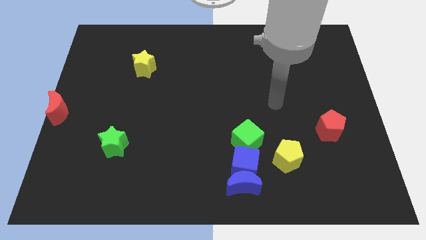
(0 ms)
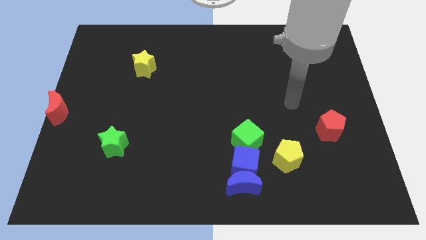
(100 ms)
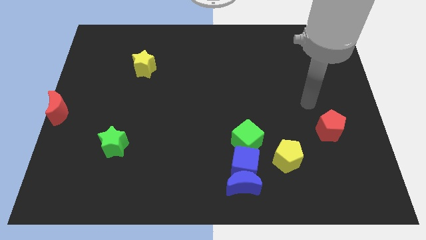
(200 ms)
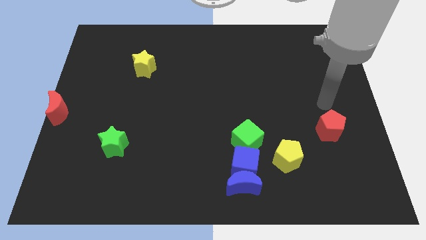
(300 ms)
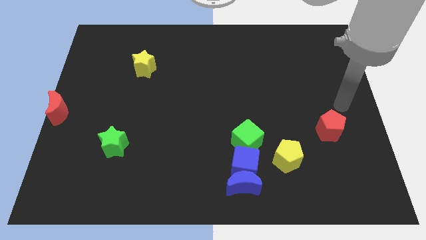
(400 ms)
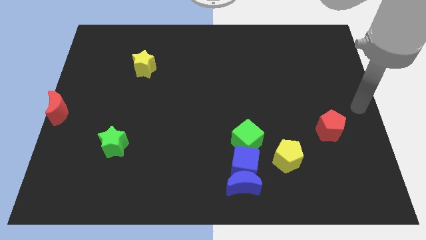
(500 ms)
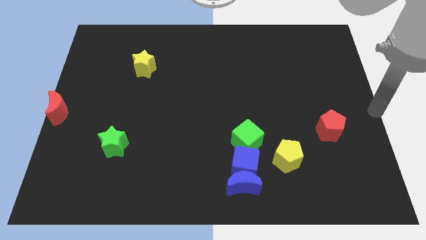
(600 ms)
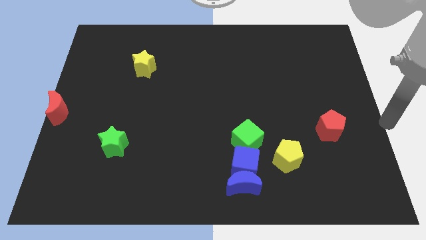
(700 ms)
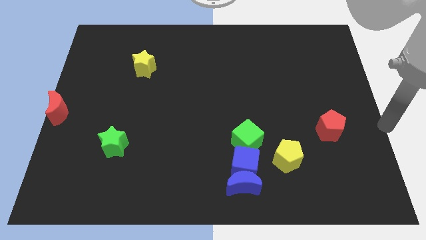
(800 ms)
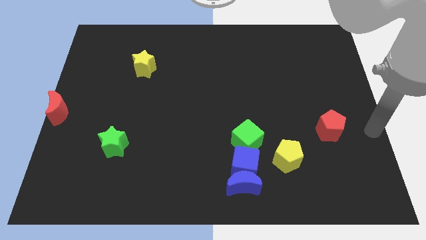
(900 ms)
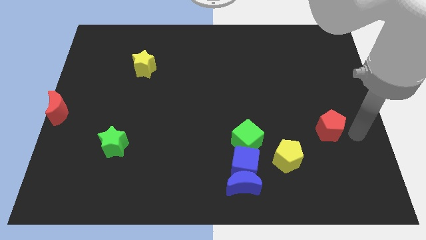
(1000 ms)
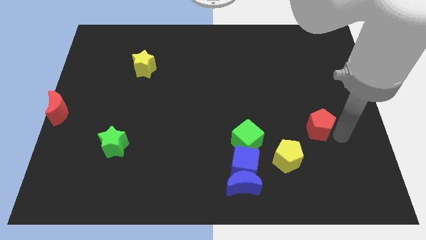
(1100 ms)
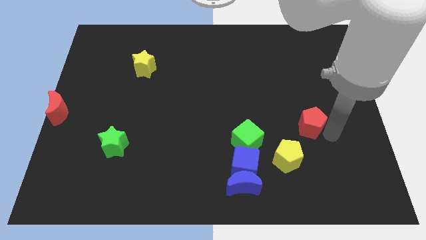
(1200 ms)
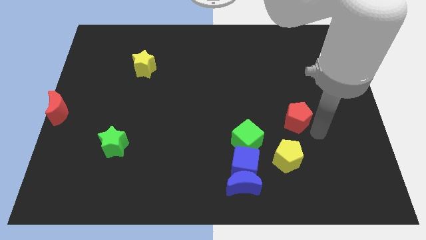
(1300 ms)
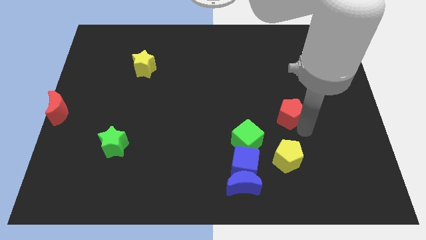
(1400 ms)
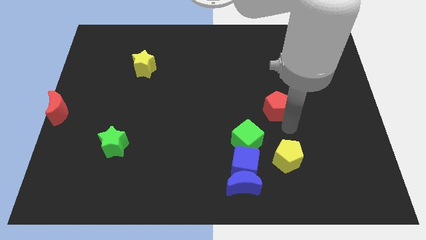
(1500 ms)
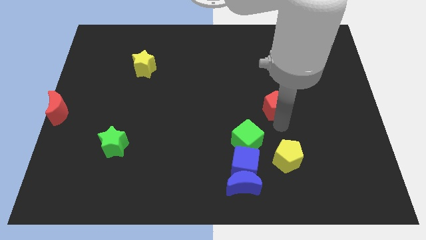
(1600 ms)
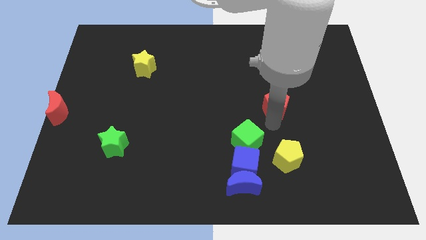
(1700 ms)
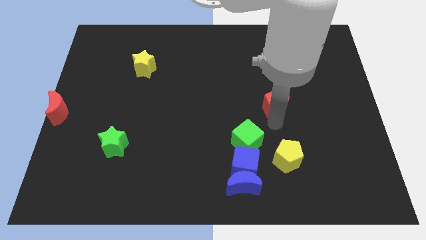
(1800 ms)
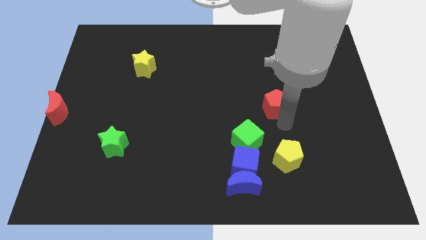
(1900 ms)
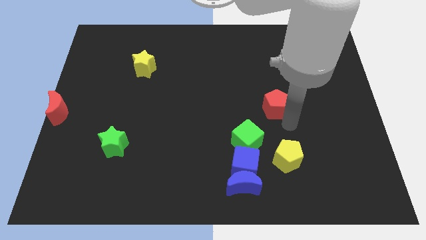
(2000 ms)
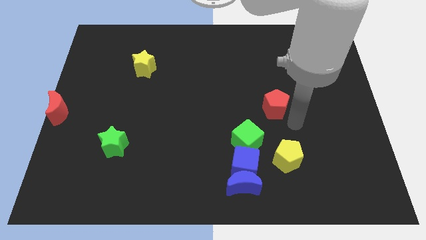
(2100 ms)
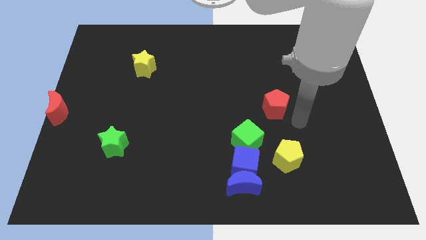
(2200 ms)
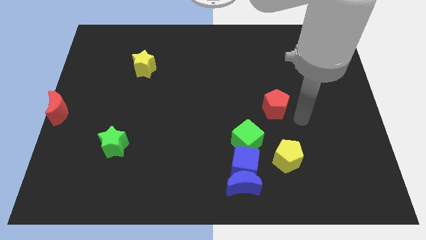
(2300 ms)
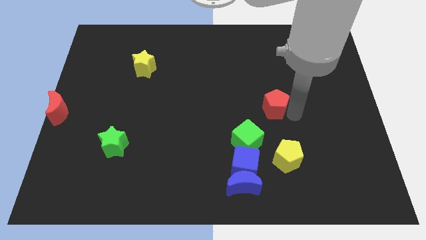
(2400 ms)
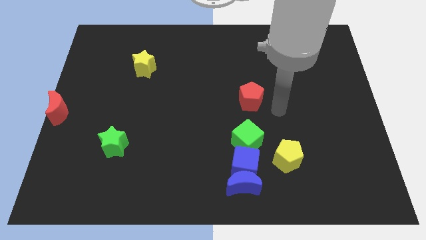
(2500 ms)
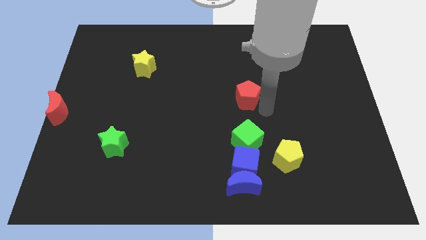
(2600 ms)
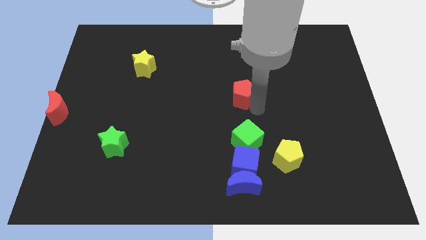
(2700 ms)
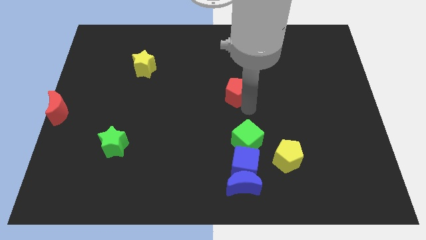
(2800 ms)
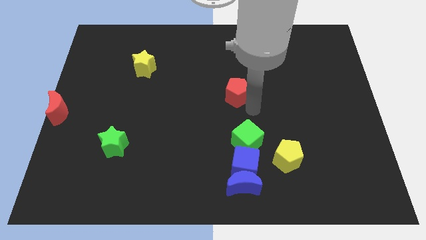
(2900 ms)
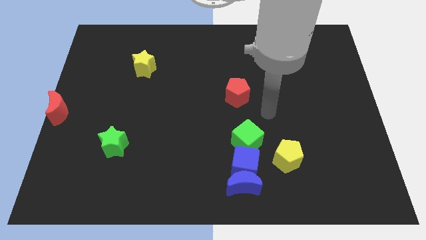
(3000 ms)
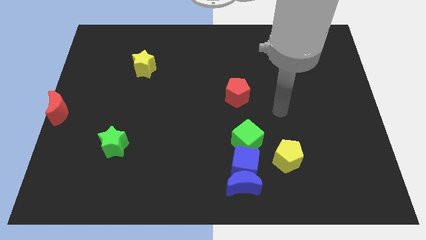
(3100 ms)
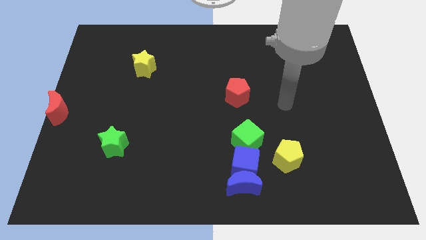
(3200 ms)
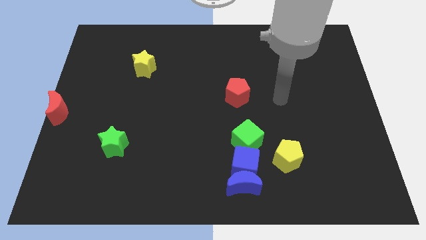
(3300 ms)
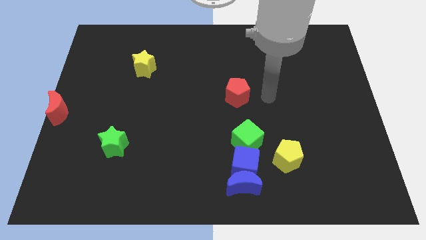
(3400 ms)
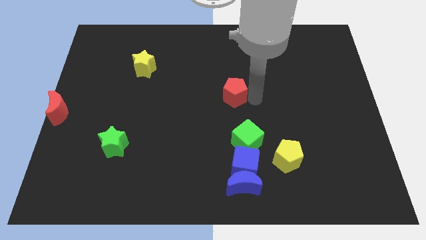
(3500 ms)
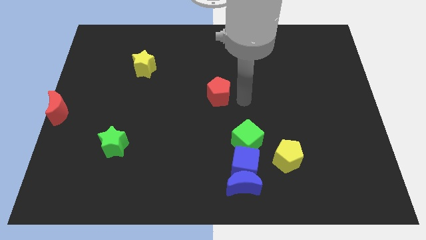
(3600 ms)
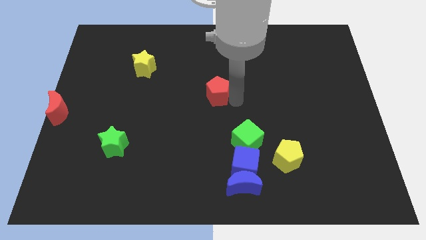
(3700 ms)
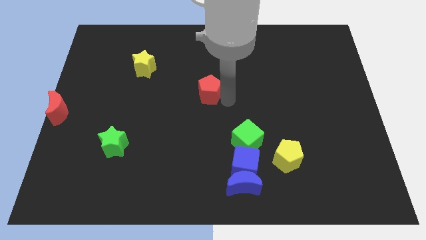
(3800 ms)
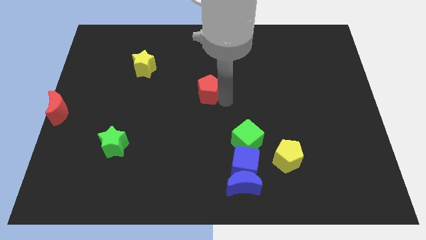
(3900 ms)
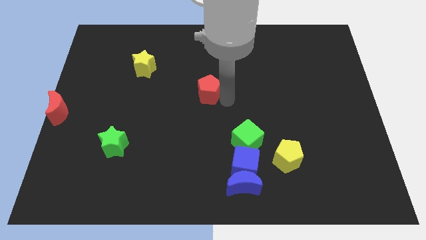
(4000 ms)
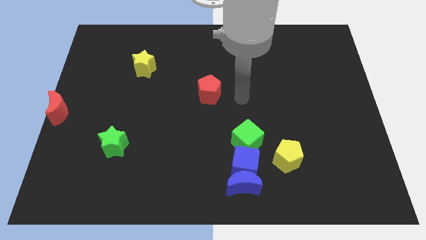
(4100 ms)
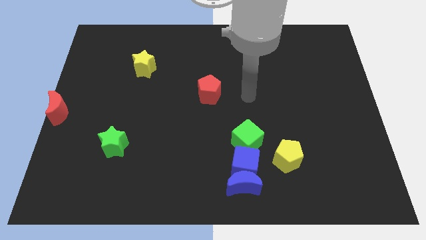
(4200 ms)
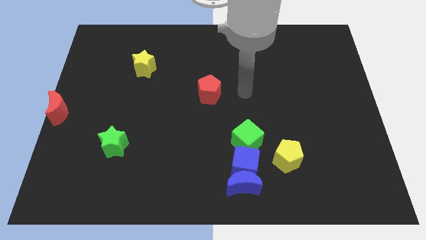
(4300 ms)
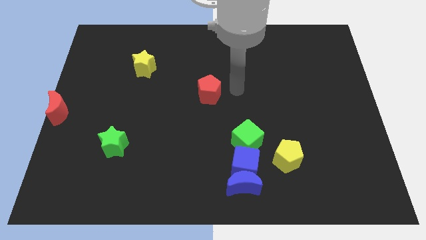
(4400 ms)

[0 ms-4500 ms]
move the red pentagon to the center of board

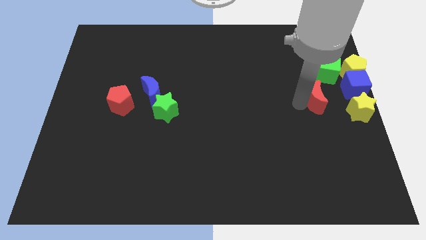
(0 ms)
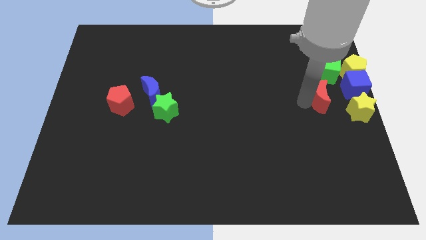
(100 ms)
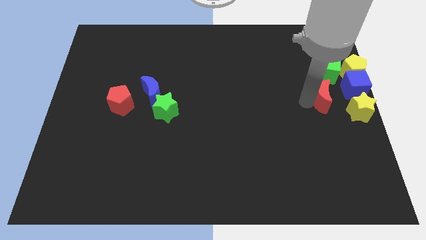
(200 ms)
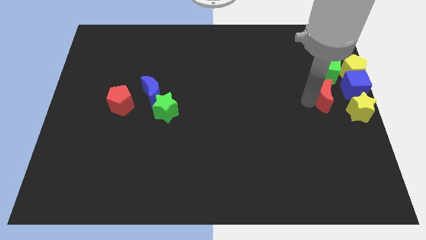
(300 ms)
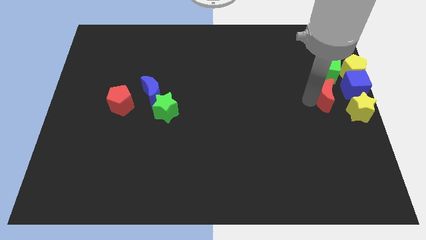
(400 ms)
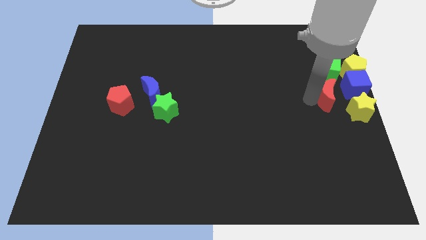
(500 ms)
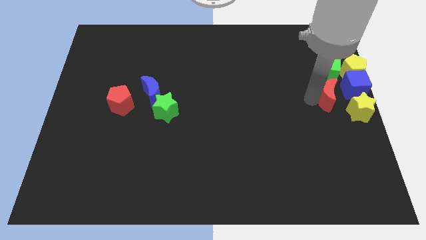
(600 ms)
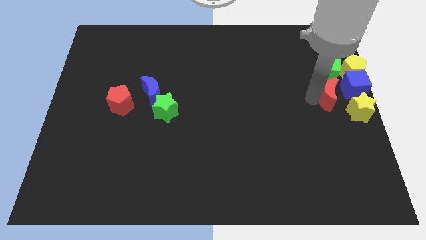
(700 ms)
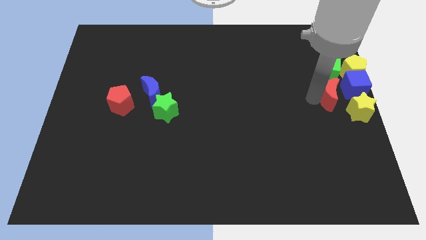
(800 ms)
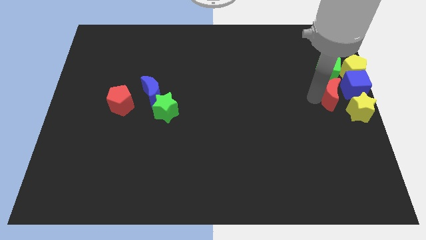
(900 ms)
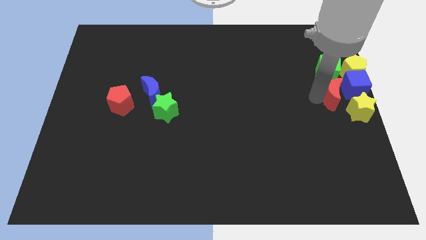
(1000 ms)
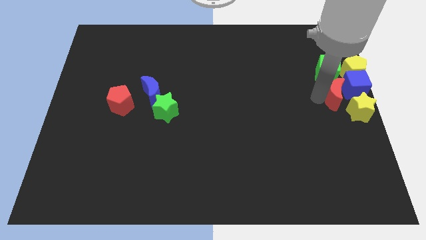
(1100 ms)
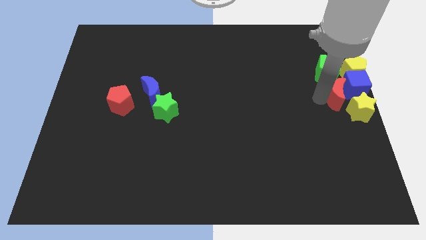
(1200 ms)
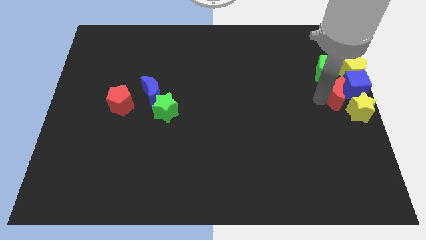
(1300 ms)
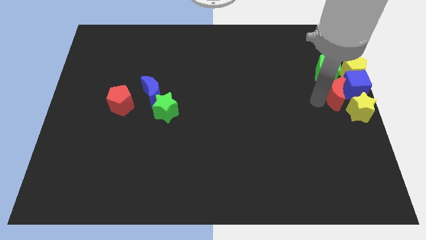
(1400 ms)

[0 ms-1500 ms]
move red crescent on the left side of the blue cube

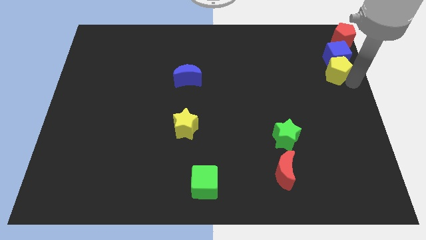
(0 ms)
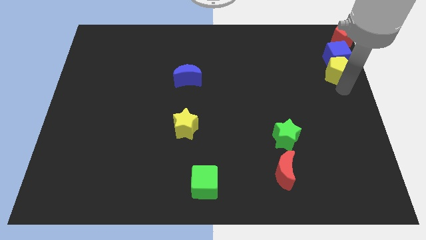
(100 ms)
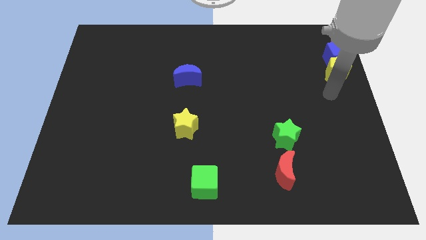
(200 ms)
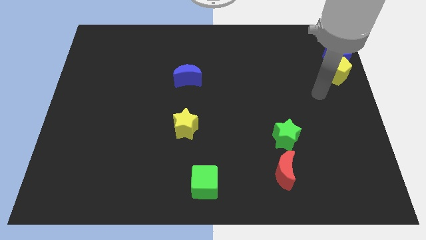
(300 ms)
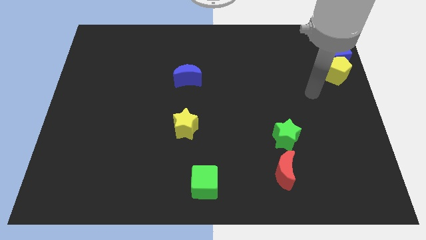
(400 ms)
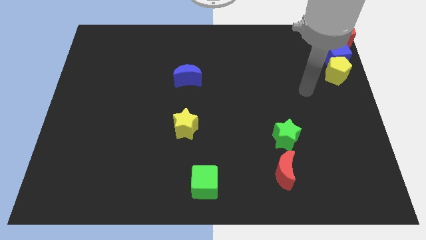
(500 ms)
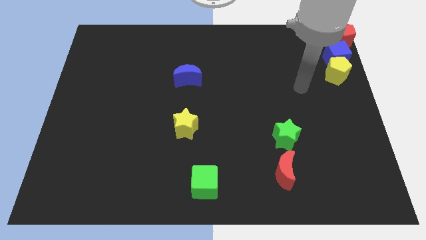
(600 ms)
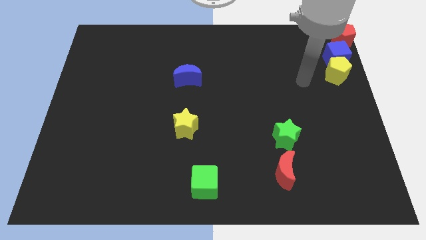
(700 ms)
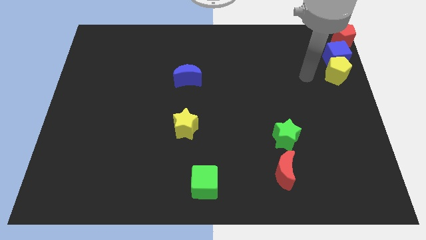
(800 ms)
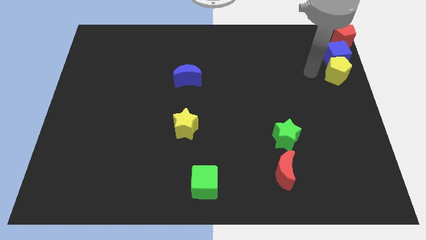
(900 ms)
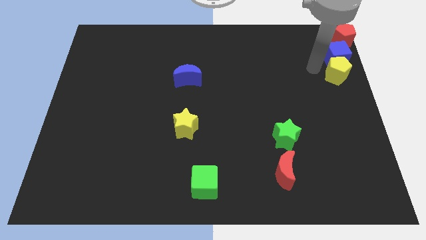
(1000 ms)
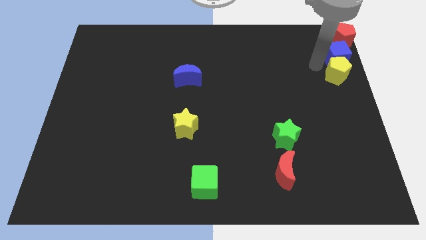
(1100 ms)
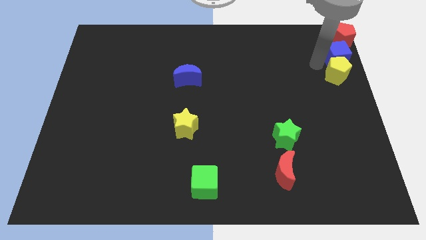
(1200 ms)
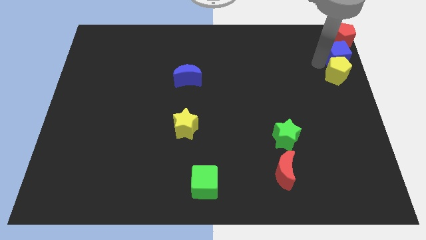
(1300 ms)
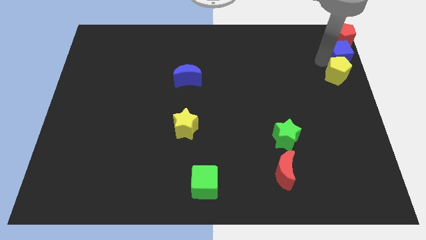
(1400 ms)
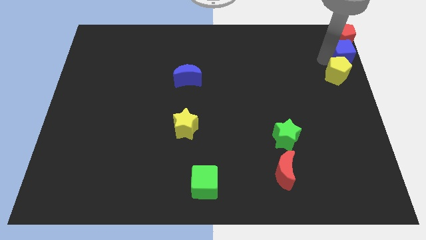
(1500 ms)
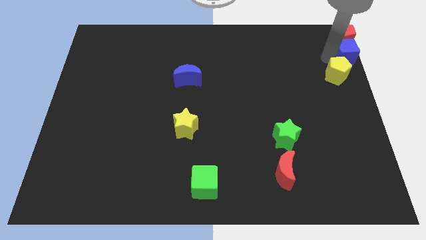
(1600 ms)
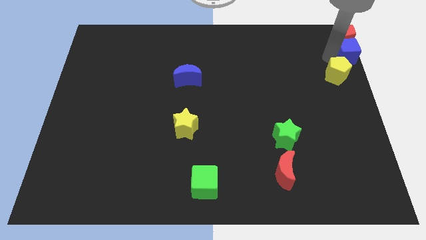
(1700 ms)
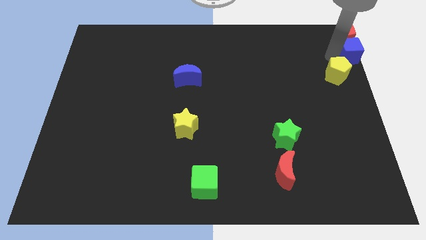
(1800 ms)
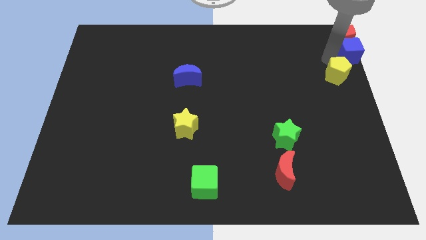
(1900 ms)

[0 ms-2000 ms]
separate yellow pentagon from the blue cube

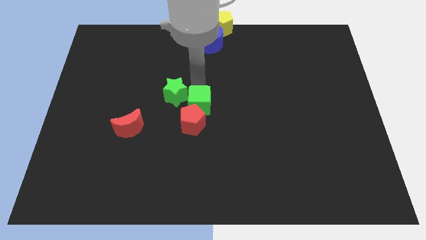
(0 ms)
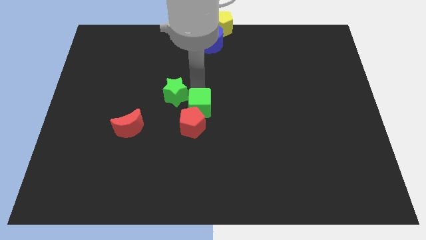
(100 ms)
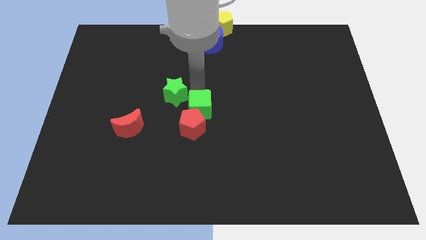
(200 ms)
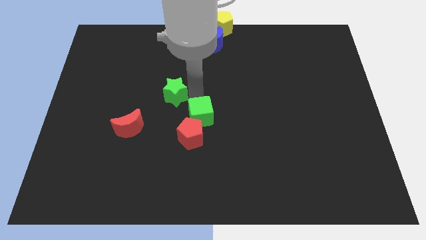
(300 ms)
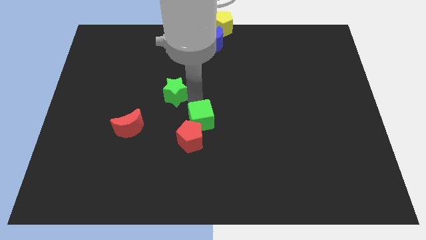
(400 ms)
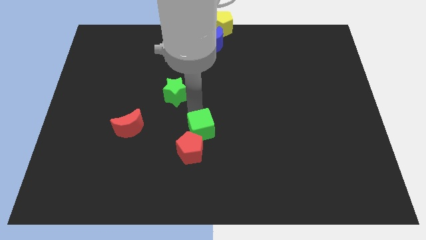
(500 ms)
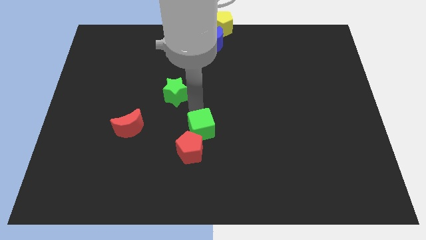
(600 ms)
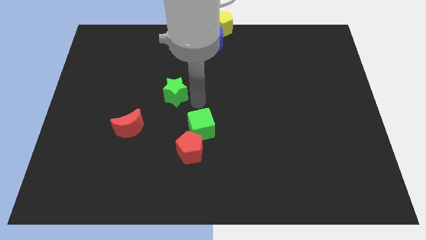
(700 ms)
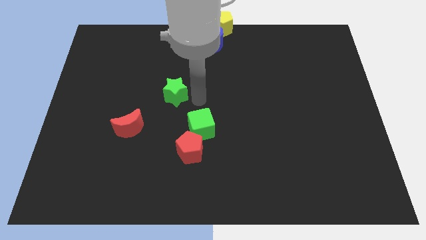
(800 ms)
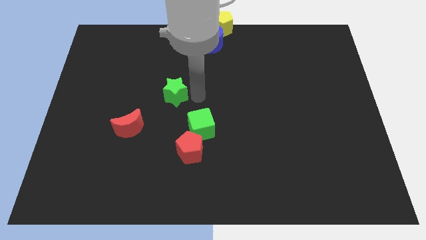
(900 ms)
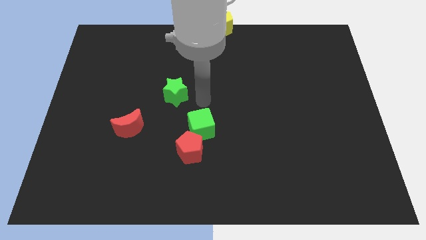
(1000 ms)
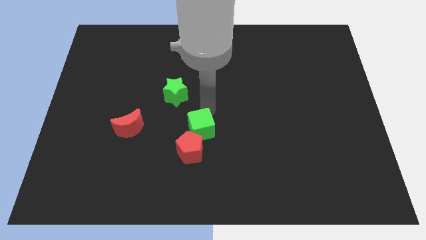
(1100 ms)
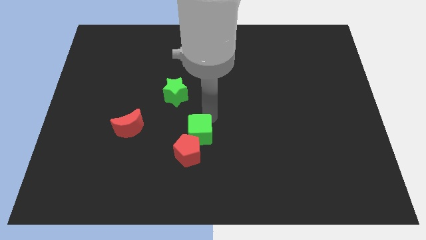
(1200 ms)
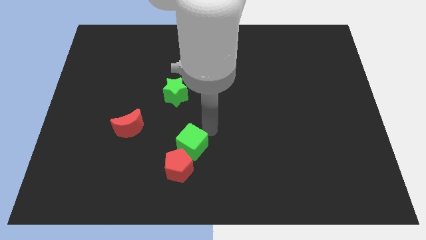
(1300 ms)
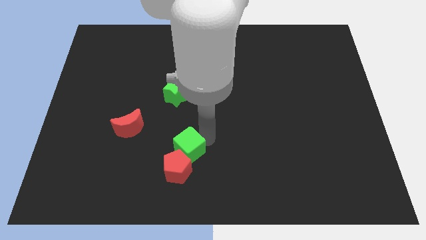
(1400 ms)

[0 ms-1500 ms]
push the green cube into the red pentagon
